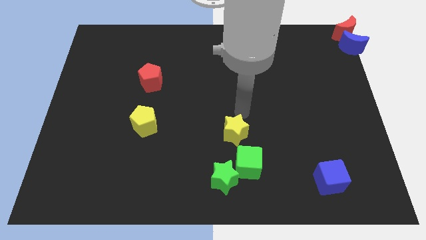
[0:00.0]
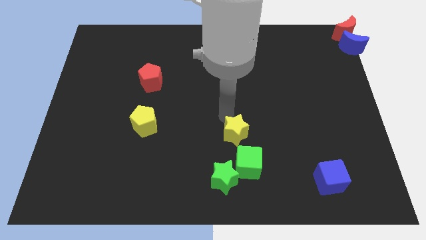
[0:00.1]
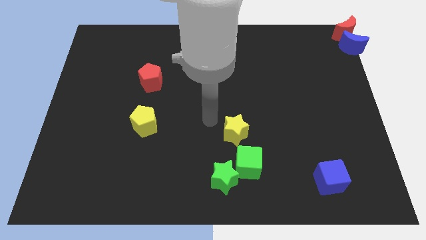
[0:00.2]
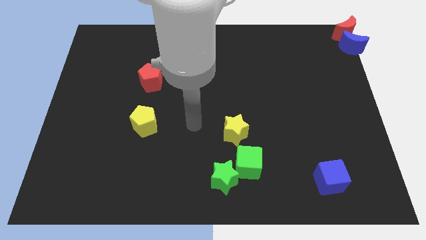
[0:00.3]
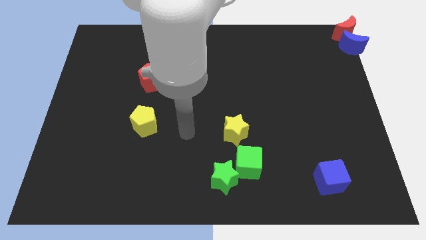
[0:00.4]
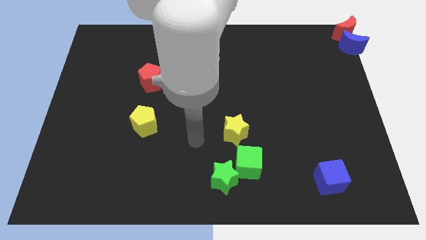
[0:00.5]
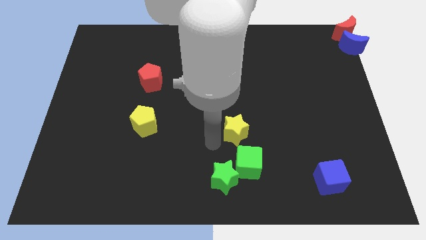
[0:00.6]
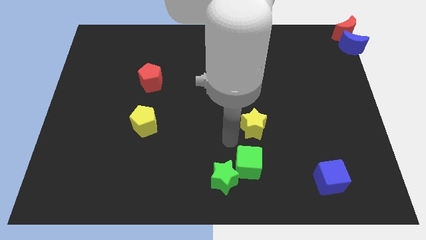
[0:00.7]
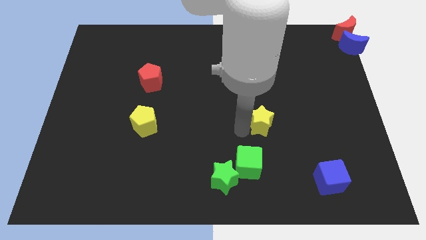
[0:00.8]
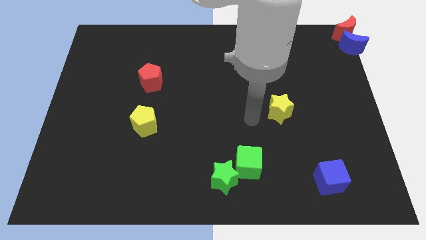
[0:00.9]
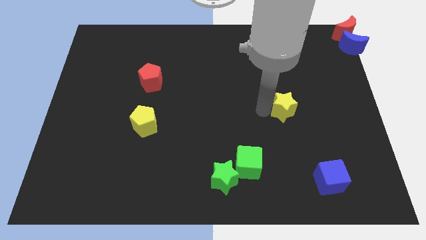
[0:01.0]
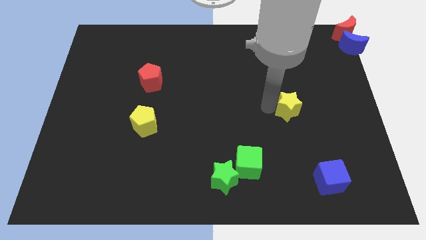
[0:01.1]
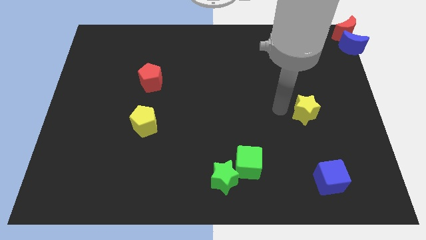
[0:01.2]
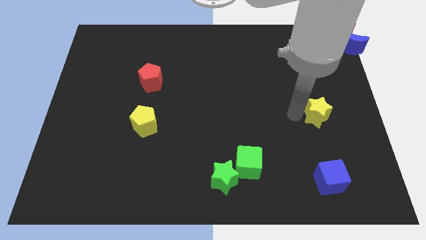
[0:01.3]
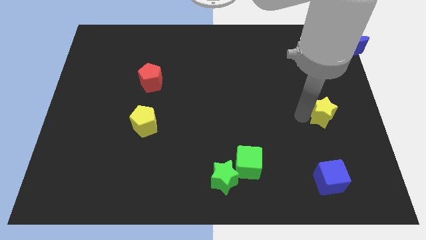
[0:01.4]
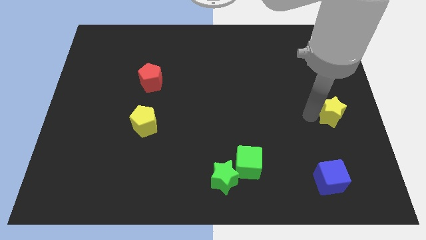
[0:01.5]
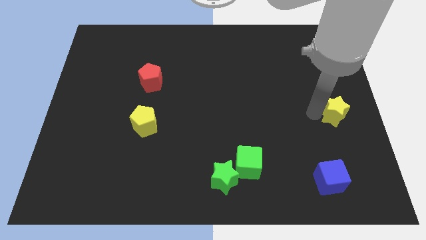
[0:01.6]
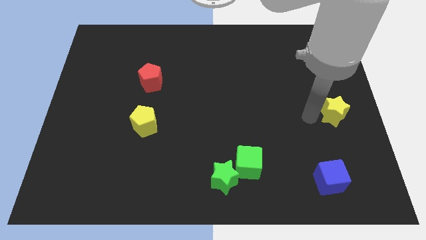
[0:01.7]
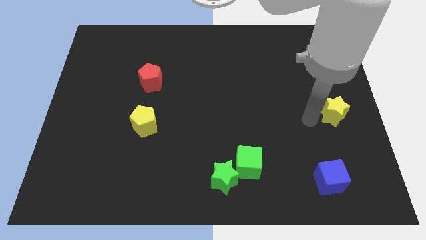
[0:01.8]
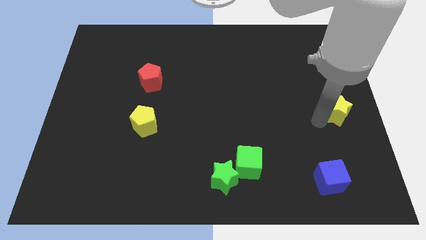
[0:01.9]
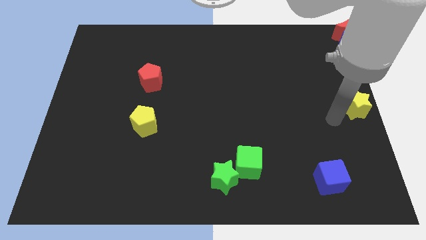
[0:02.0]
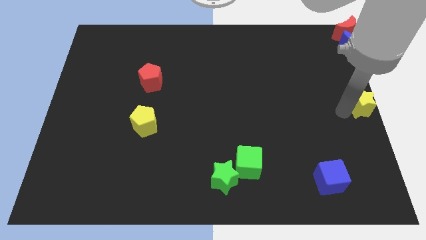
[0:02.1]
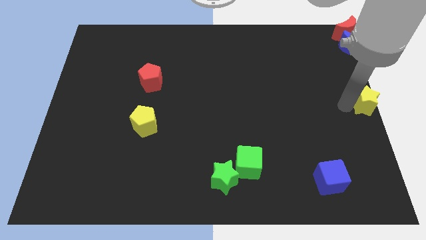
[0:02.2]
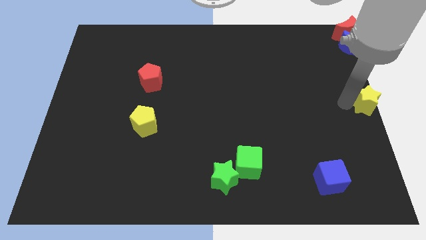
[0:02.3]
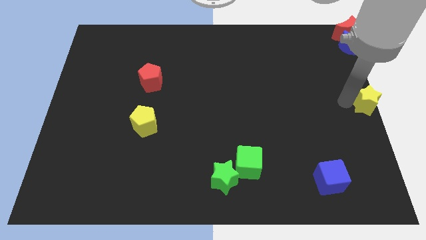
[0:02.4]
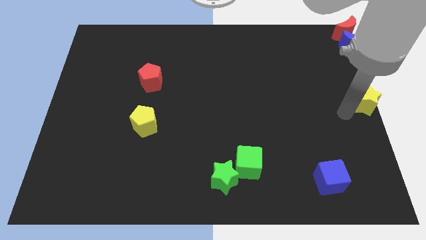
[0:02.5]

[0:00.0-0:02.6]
drag yellow star towards middle right of the board

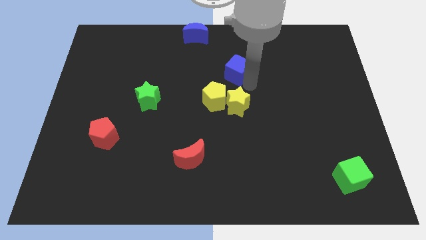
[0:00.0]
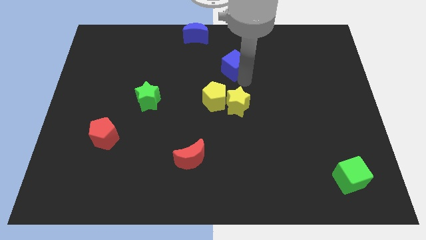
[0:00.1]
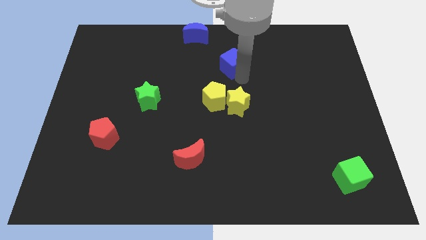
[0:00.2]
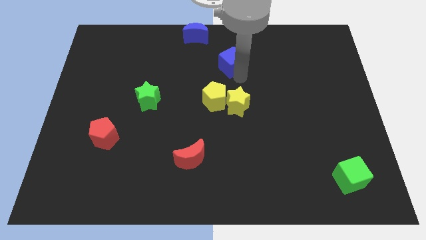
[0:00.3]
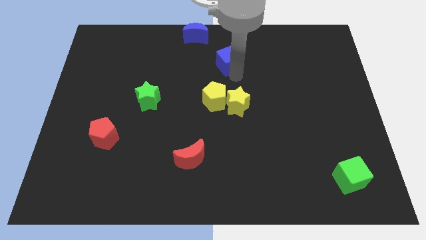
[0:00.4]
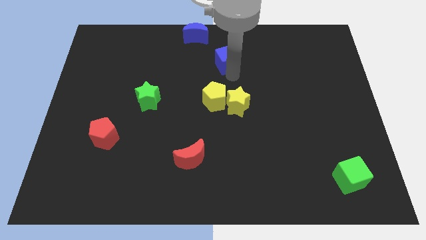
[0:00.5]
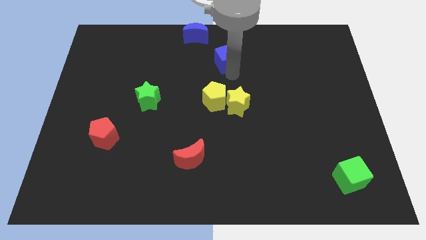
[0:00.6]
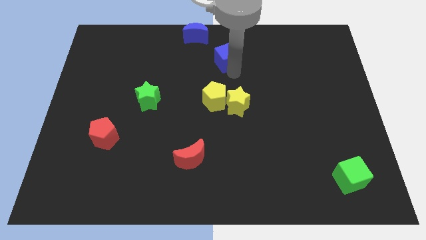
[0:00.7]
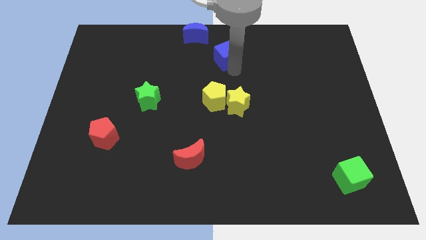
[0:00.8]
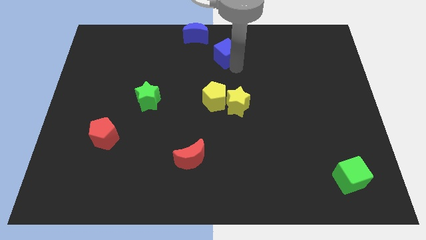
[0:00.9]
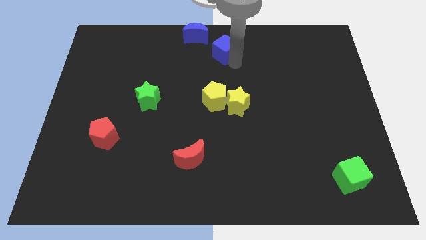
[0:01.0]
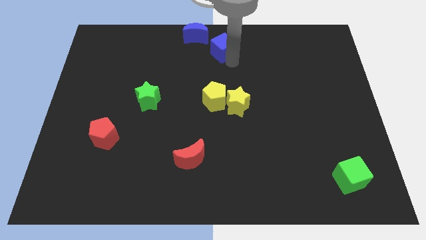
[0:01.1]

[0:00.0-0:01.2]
move the blue cube parallel to the yellow pentagon

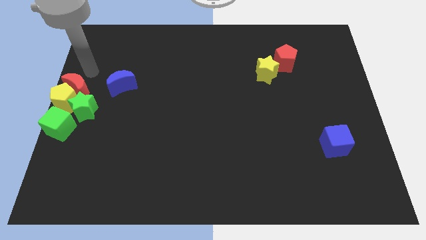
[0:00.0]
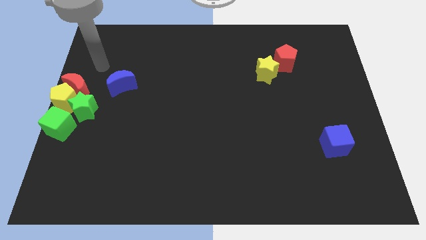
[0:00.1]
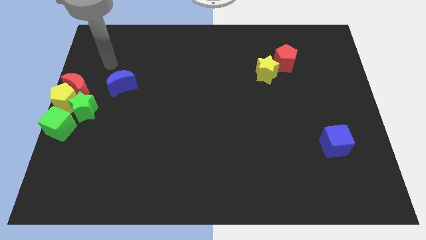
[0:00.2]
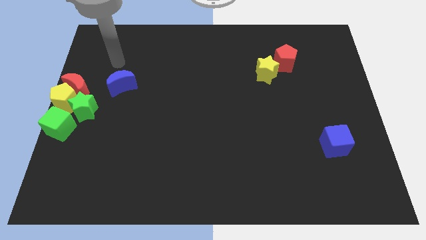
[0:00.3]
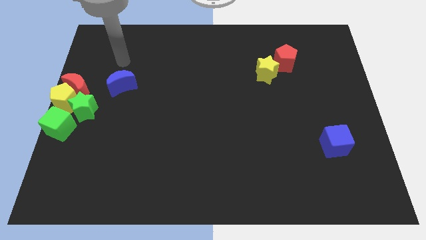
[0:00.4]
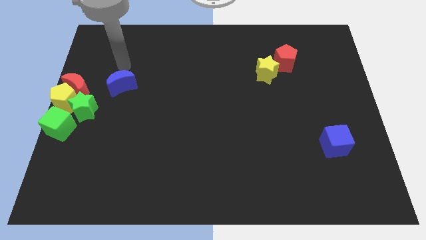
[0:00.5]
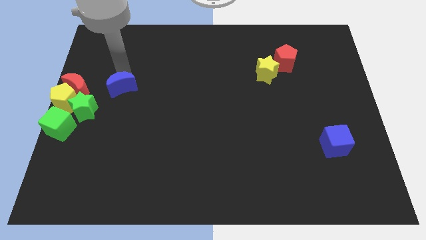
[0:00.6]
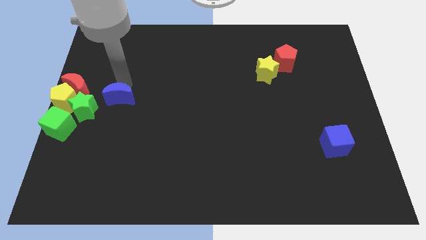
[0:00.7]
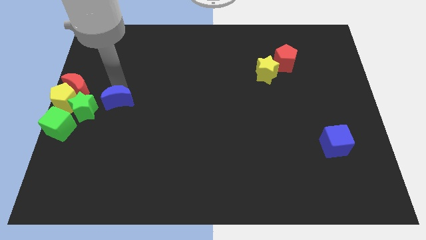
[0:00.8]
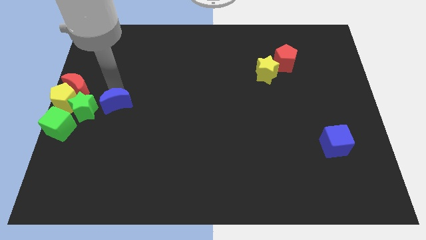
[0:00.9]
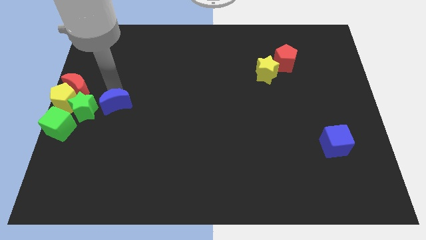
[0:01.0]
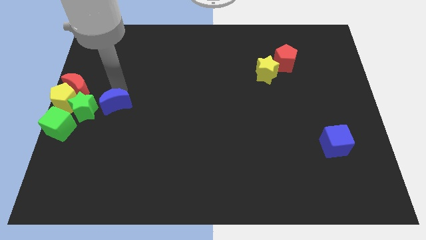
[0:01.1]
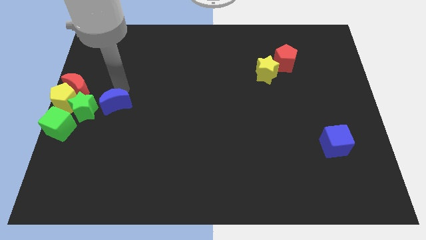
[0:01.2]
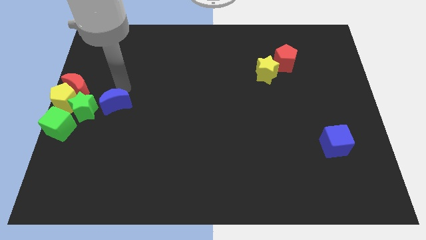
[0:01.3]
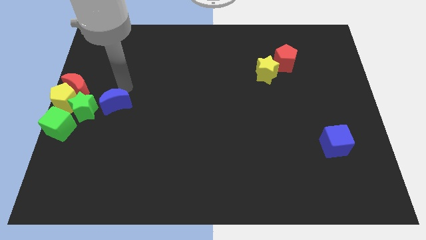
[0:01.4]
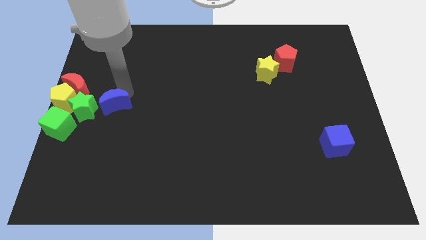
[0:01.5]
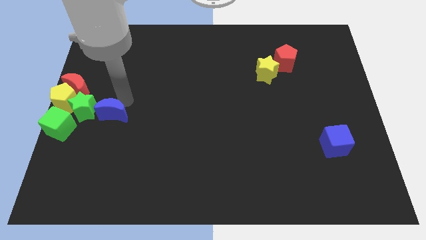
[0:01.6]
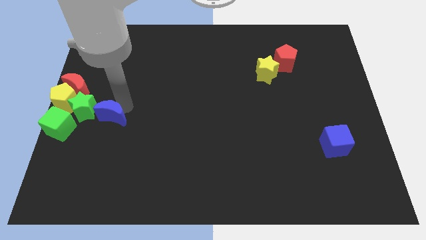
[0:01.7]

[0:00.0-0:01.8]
place the blue moon at the right of the green star

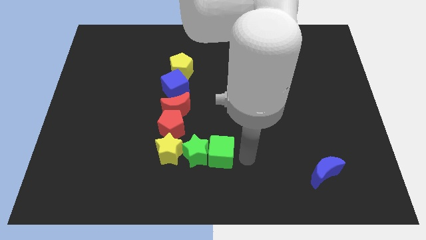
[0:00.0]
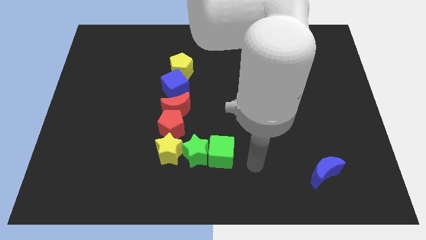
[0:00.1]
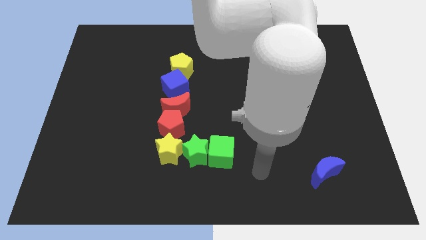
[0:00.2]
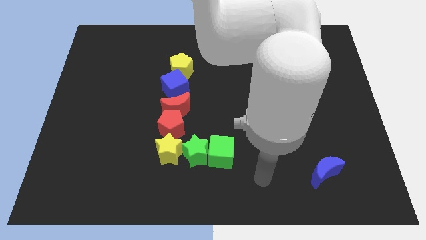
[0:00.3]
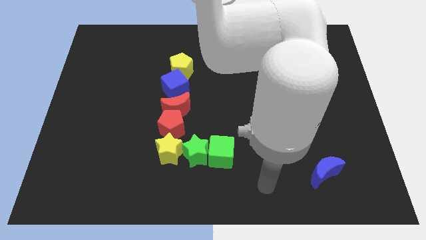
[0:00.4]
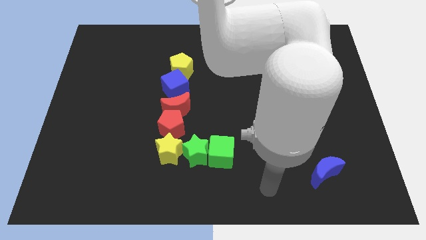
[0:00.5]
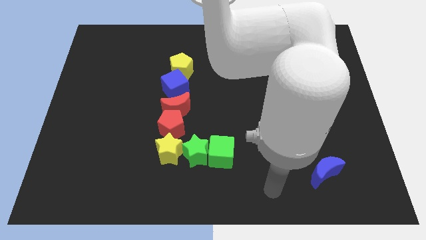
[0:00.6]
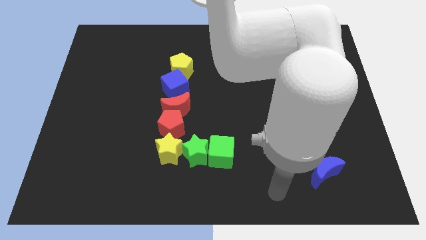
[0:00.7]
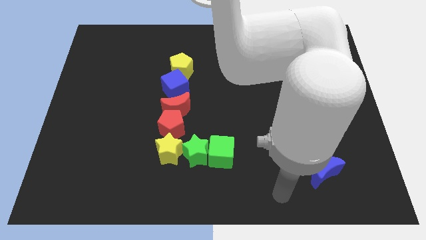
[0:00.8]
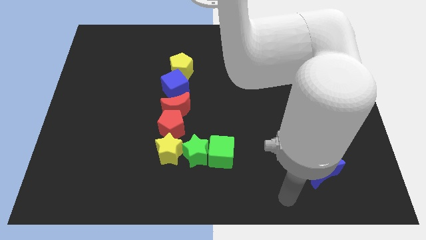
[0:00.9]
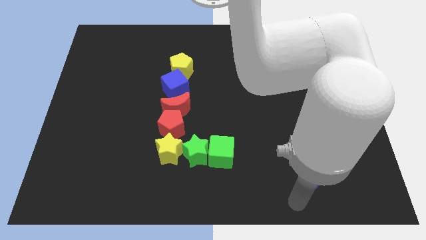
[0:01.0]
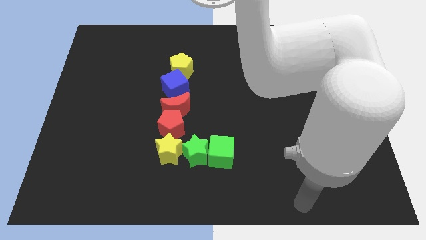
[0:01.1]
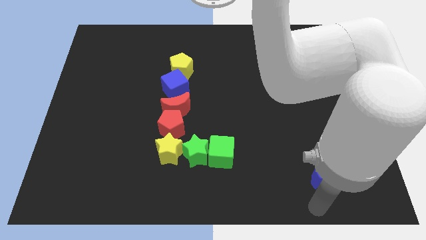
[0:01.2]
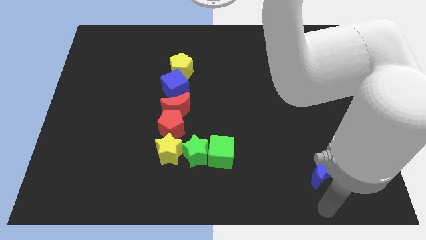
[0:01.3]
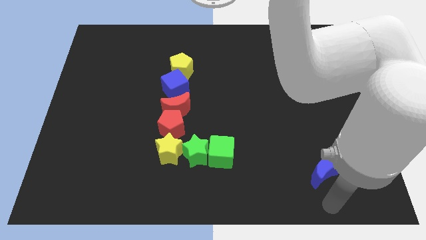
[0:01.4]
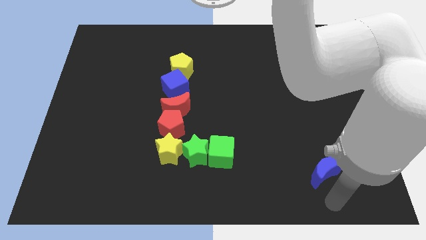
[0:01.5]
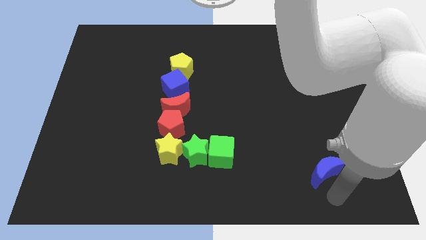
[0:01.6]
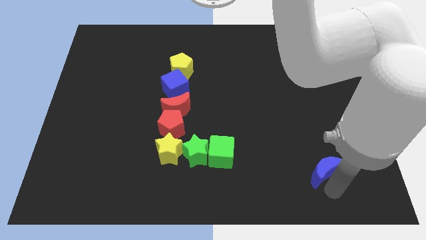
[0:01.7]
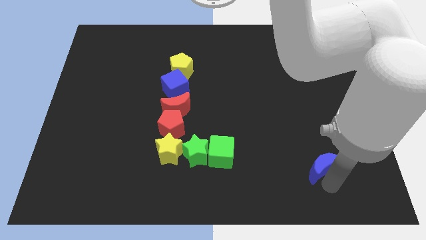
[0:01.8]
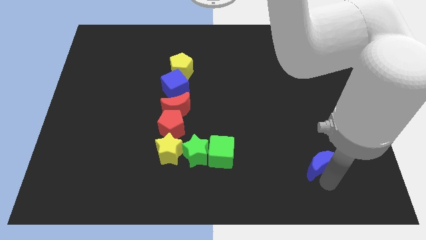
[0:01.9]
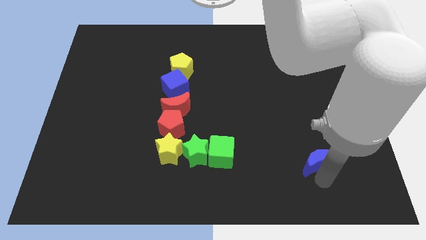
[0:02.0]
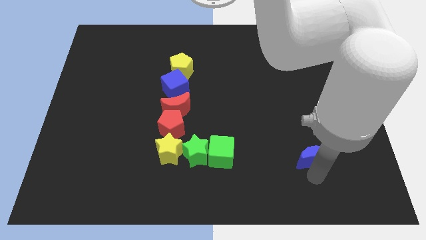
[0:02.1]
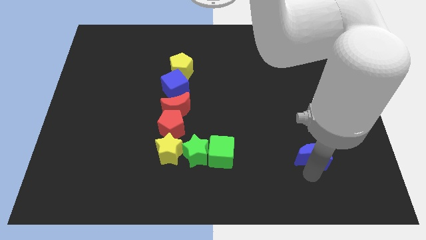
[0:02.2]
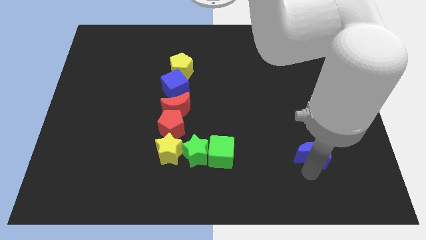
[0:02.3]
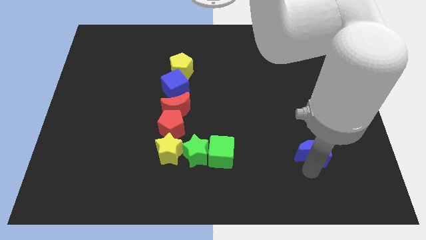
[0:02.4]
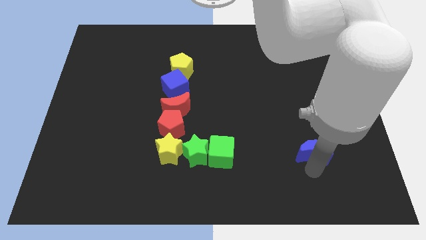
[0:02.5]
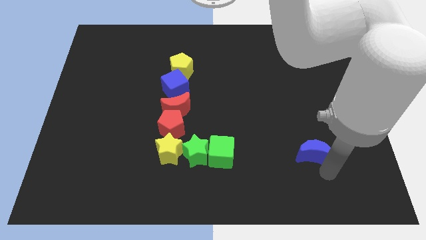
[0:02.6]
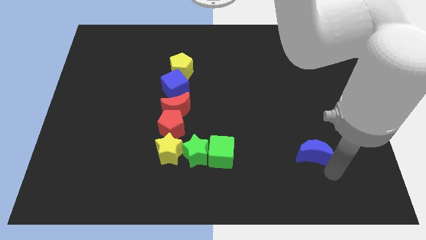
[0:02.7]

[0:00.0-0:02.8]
push the blue moon parallel right to the green cube

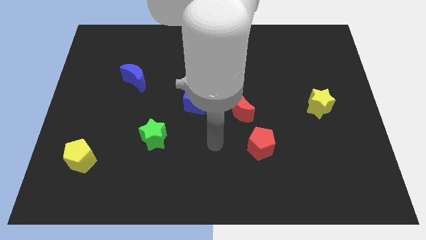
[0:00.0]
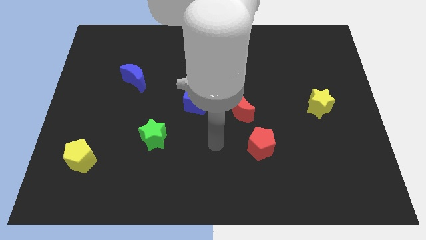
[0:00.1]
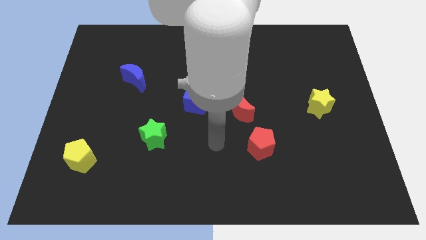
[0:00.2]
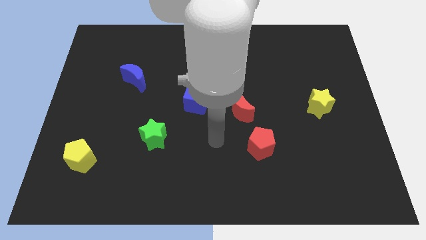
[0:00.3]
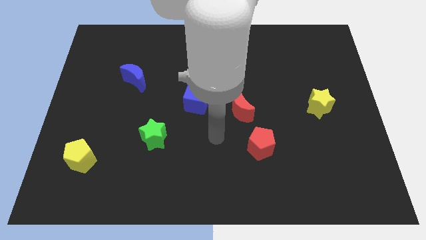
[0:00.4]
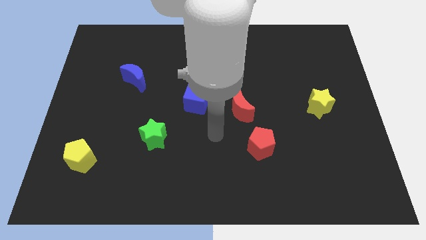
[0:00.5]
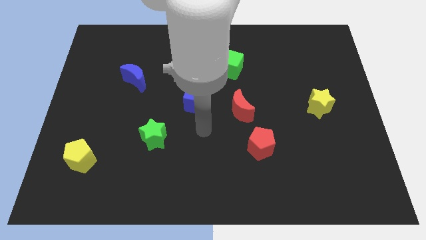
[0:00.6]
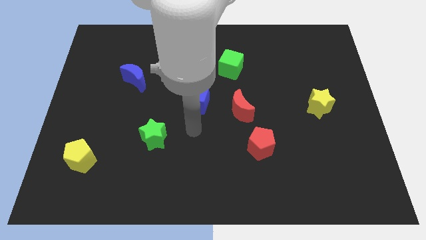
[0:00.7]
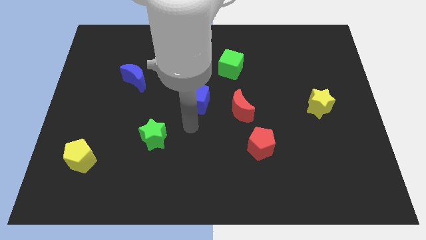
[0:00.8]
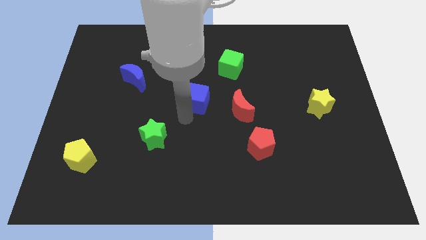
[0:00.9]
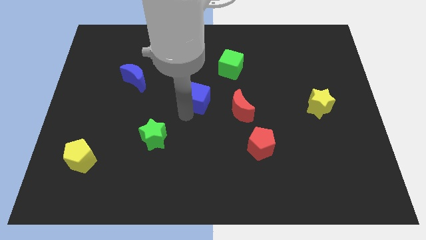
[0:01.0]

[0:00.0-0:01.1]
move your arm to the bottom of the blue cube
